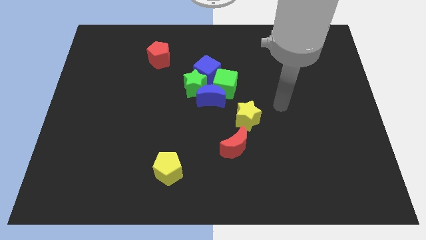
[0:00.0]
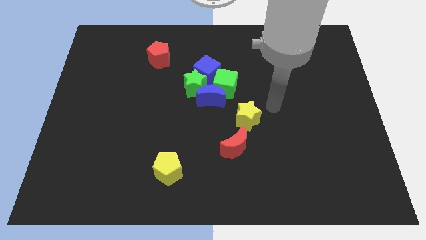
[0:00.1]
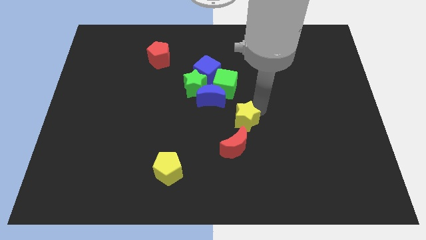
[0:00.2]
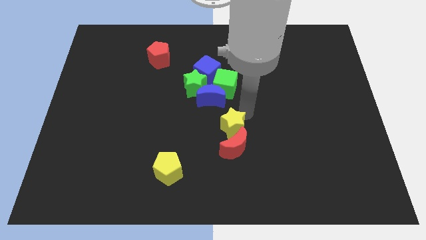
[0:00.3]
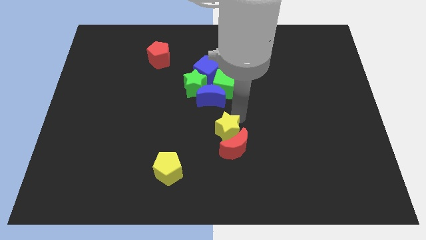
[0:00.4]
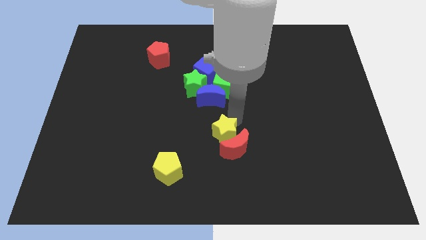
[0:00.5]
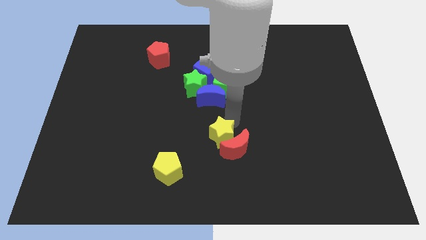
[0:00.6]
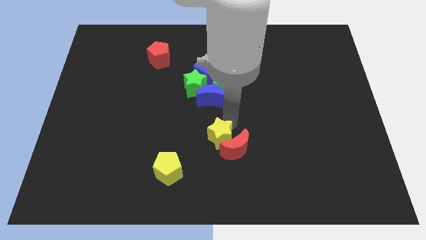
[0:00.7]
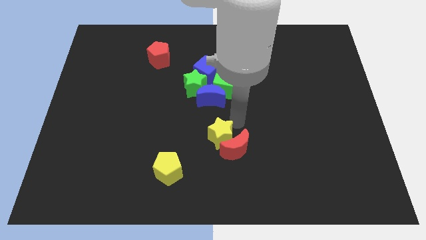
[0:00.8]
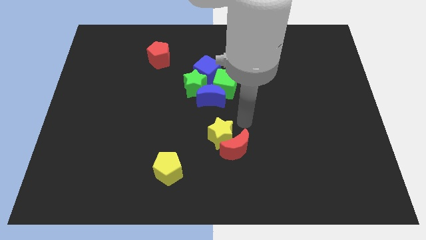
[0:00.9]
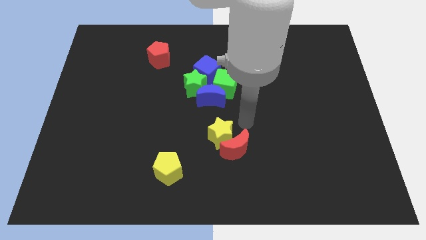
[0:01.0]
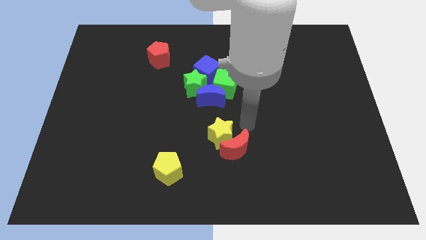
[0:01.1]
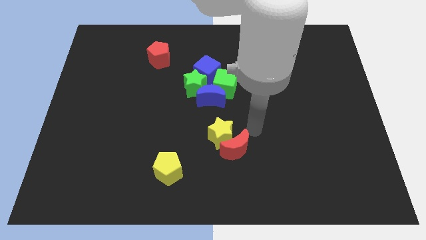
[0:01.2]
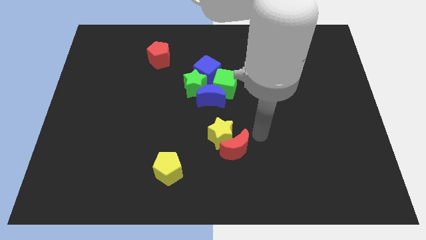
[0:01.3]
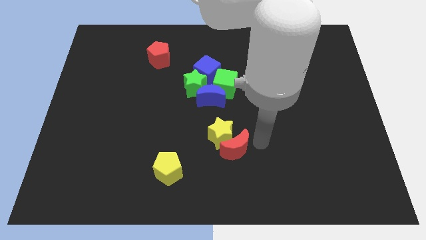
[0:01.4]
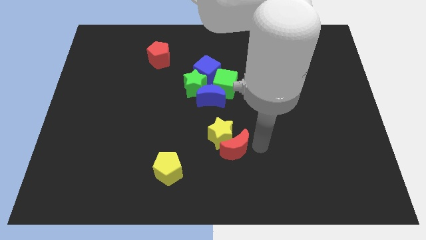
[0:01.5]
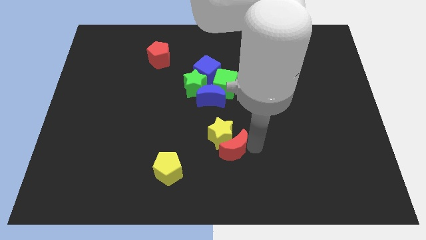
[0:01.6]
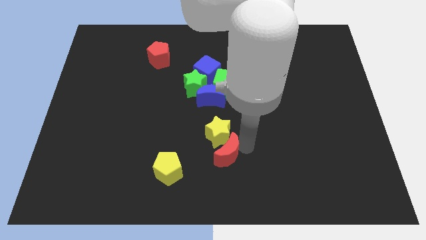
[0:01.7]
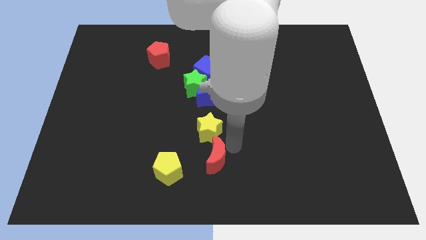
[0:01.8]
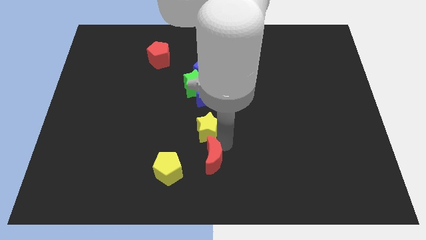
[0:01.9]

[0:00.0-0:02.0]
place the yellow star under the blue moon

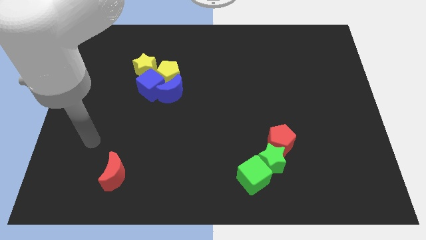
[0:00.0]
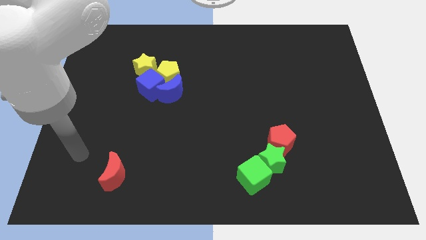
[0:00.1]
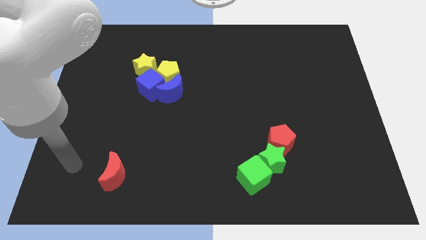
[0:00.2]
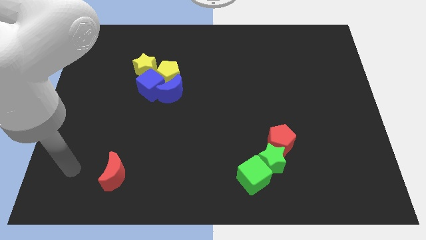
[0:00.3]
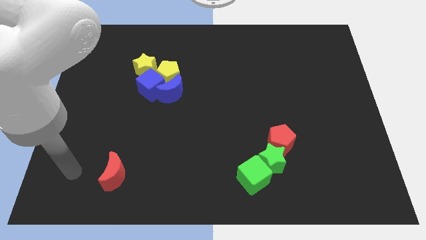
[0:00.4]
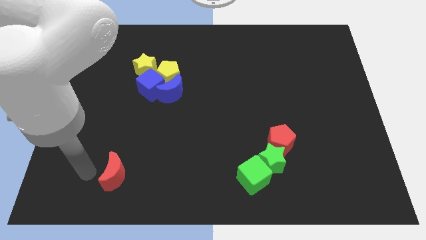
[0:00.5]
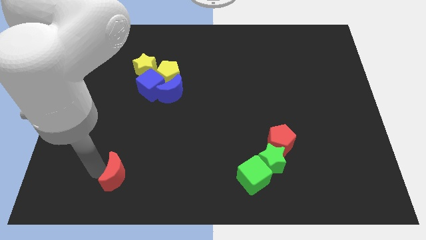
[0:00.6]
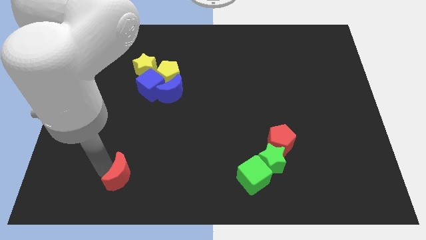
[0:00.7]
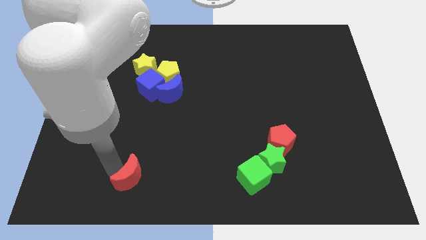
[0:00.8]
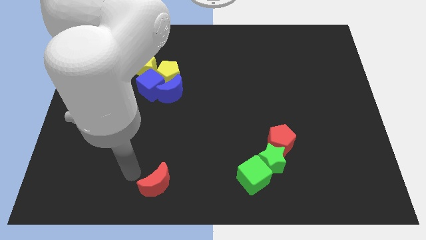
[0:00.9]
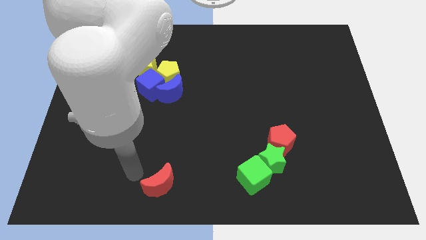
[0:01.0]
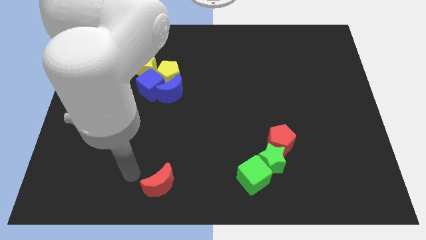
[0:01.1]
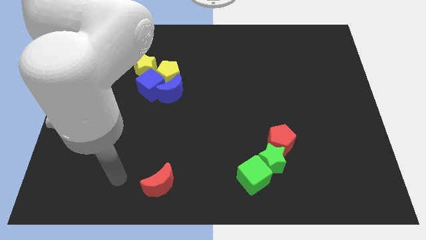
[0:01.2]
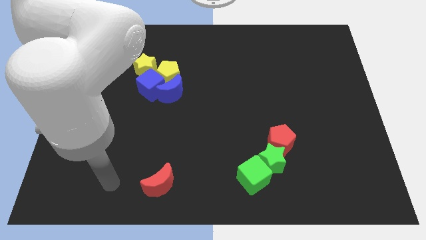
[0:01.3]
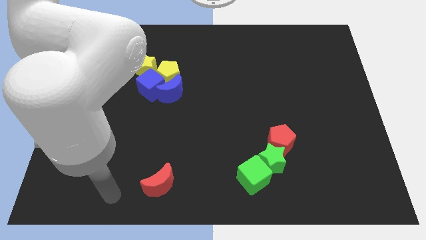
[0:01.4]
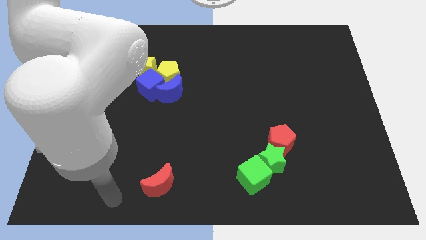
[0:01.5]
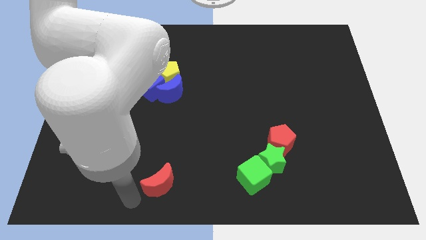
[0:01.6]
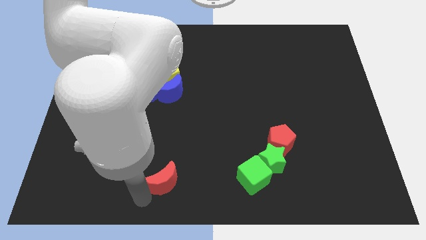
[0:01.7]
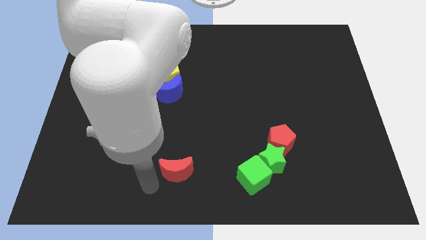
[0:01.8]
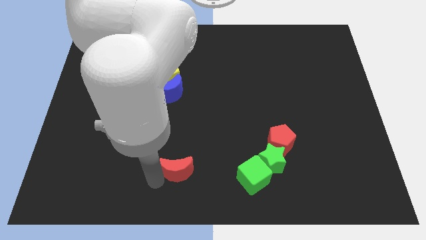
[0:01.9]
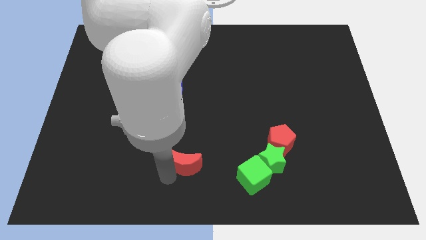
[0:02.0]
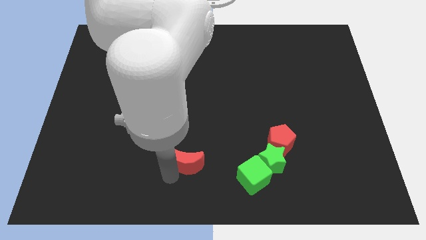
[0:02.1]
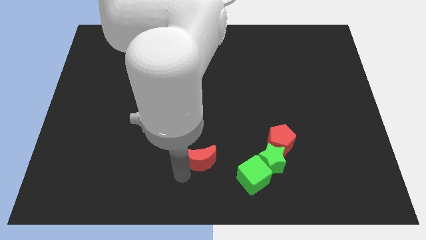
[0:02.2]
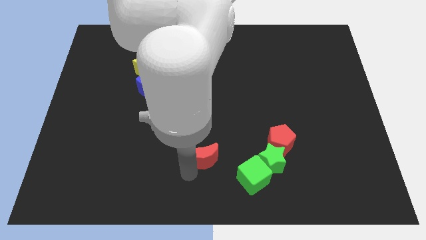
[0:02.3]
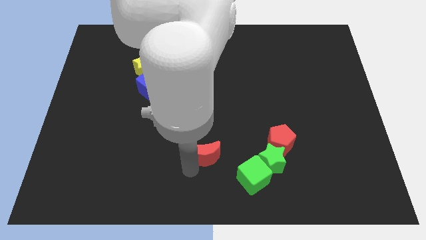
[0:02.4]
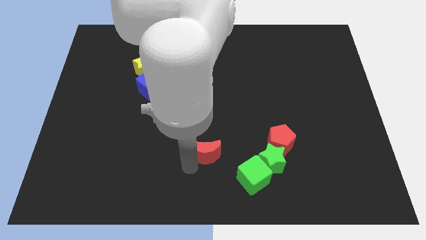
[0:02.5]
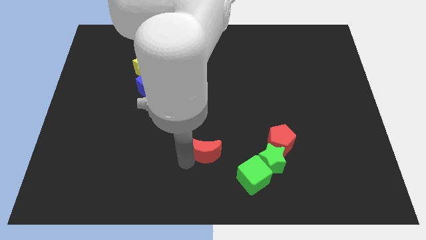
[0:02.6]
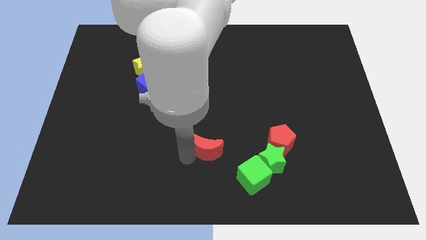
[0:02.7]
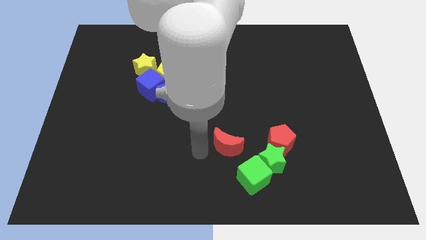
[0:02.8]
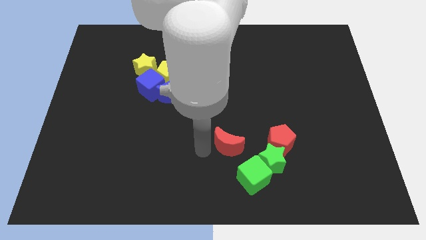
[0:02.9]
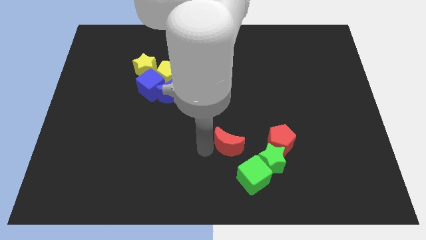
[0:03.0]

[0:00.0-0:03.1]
push the red crescent towards the group of blocks

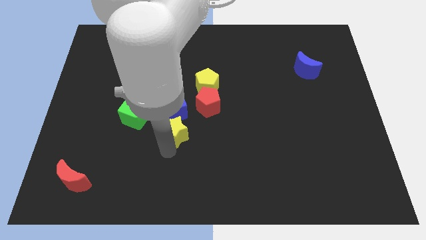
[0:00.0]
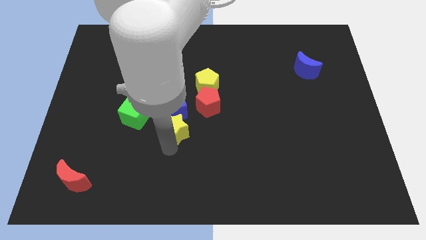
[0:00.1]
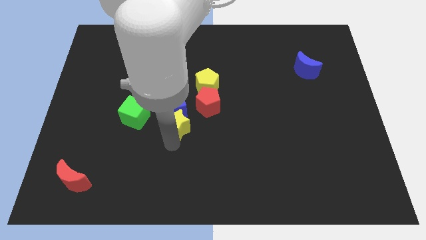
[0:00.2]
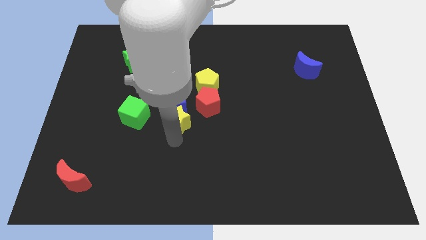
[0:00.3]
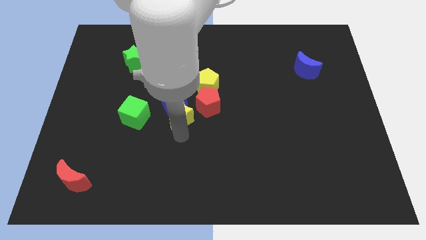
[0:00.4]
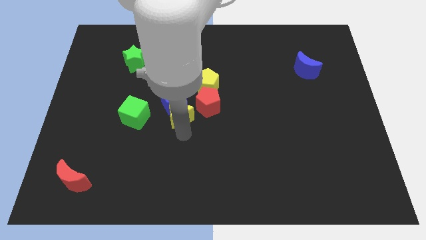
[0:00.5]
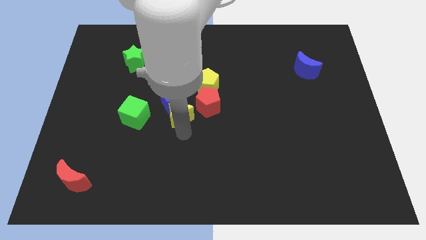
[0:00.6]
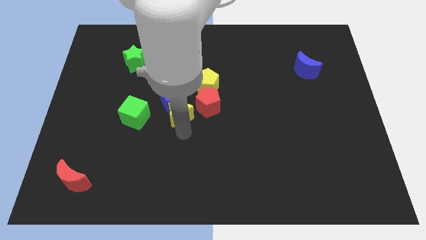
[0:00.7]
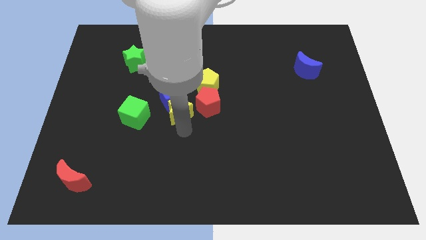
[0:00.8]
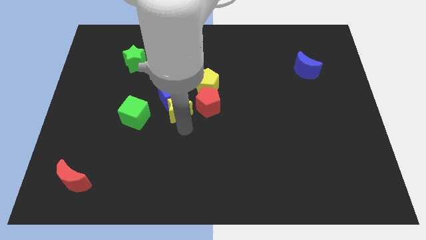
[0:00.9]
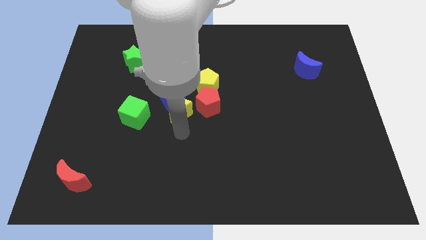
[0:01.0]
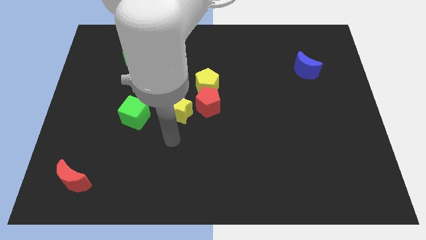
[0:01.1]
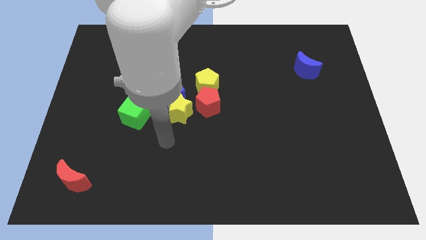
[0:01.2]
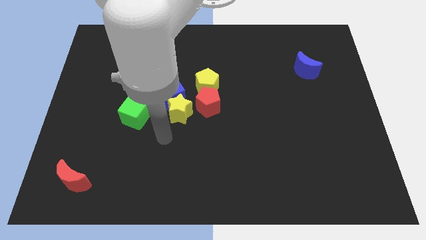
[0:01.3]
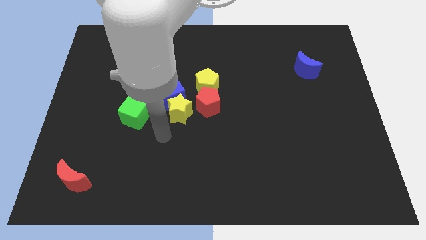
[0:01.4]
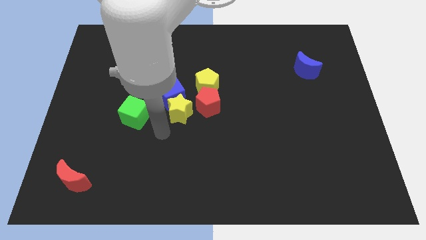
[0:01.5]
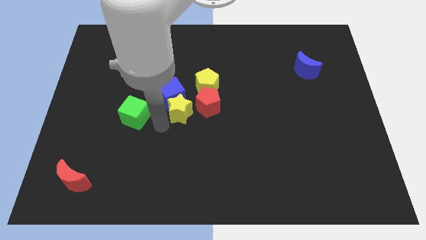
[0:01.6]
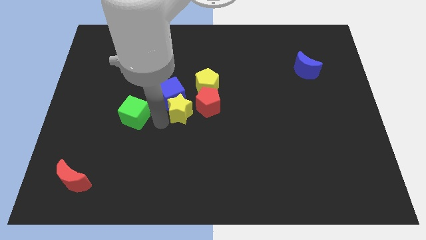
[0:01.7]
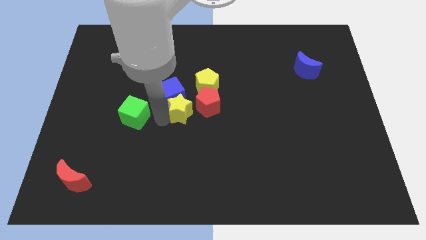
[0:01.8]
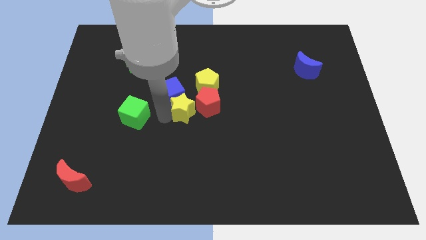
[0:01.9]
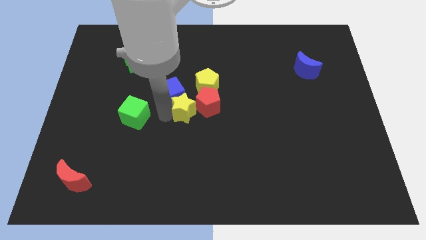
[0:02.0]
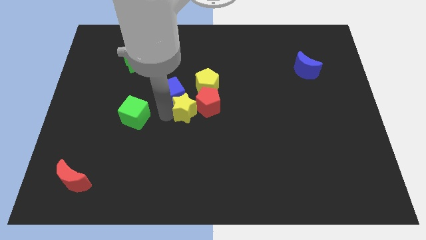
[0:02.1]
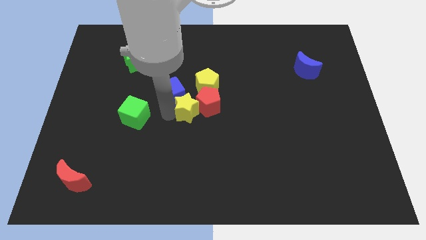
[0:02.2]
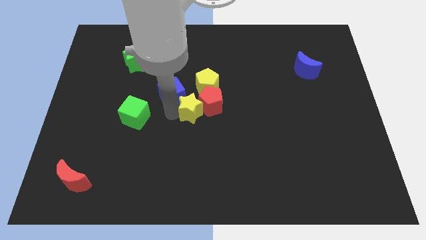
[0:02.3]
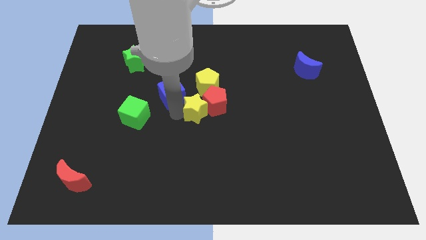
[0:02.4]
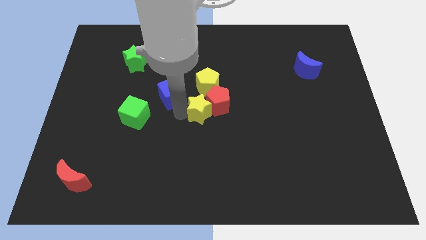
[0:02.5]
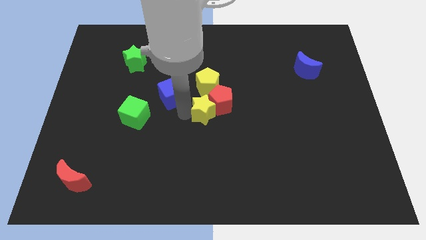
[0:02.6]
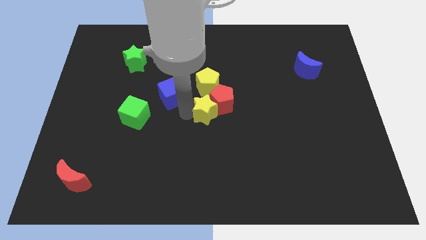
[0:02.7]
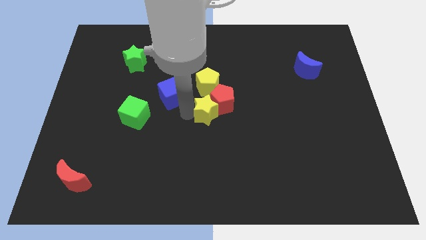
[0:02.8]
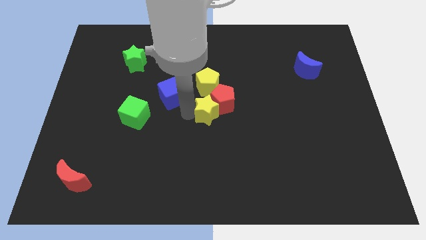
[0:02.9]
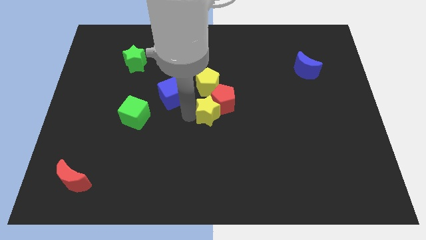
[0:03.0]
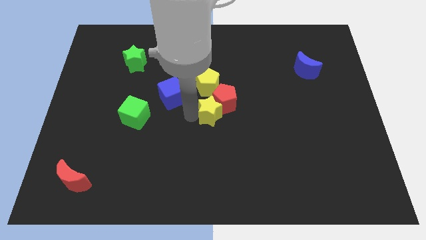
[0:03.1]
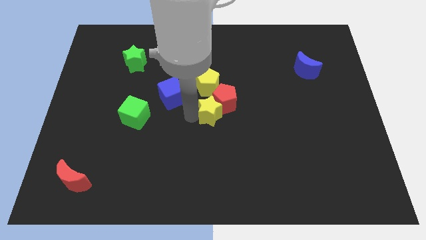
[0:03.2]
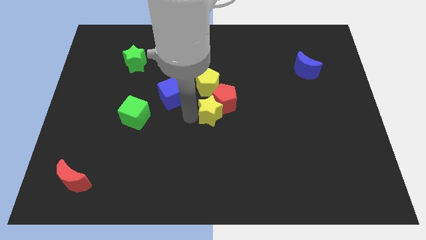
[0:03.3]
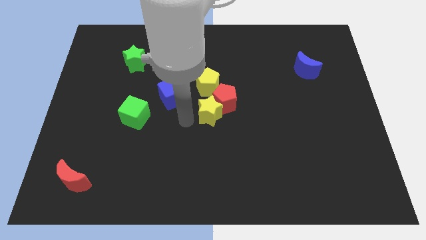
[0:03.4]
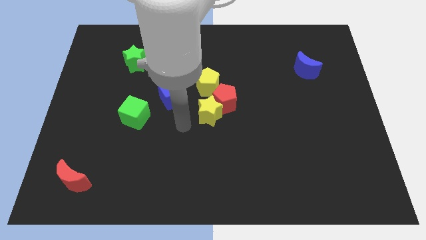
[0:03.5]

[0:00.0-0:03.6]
move the yellow star to the left side of the red crescent

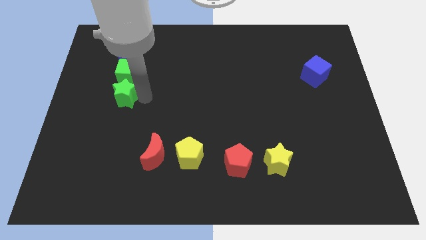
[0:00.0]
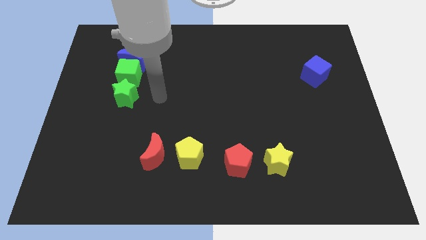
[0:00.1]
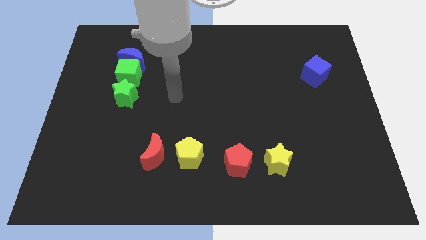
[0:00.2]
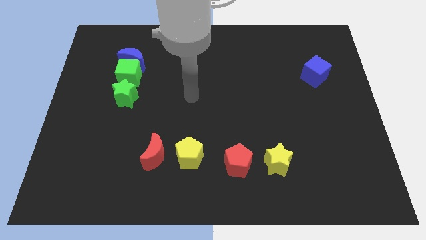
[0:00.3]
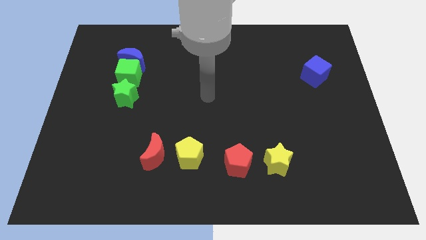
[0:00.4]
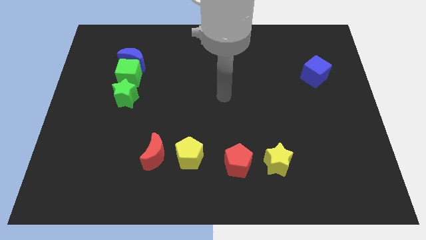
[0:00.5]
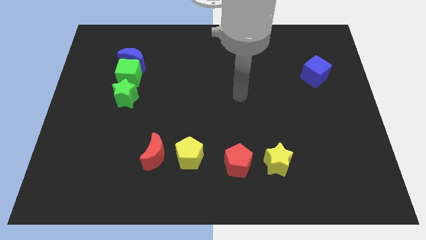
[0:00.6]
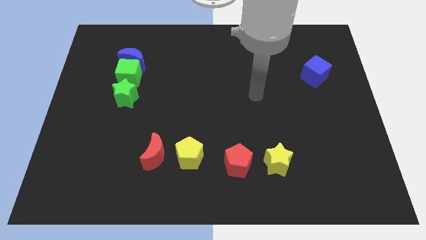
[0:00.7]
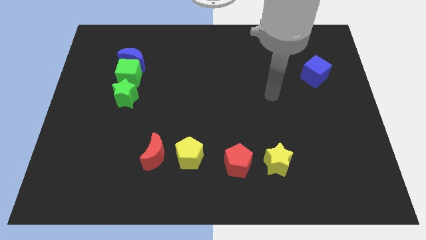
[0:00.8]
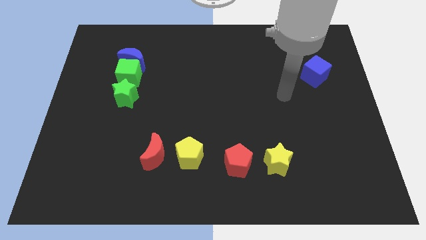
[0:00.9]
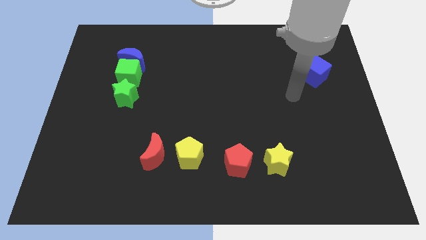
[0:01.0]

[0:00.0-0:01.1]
put your hand vertically above the yellow star
